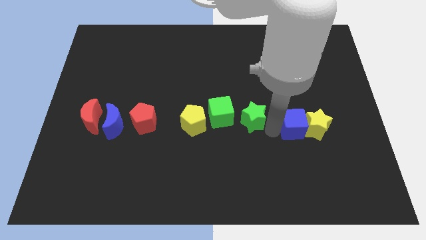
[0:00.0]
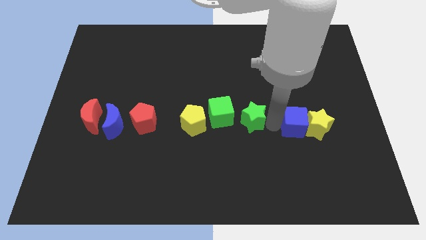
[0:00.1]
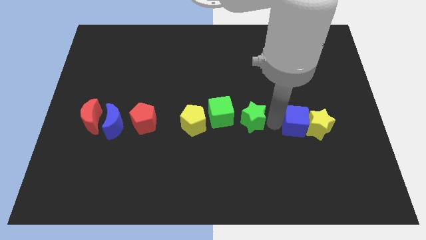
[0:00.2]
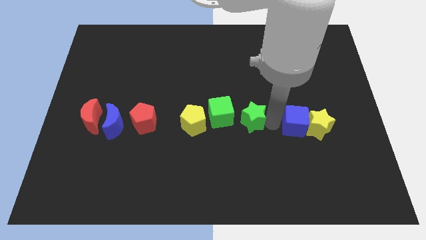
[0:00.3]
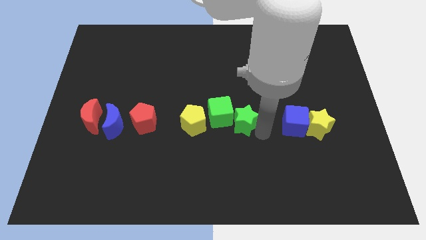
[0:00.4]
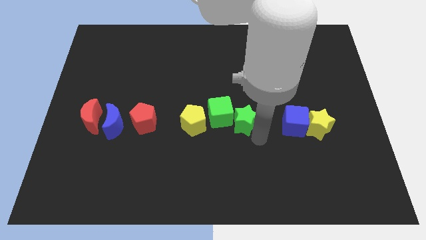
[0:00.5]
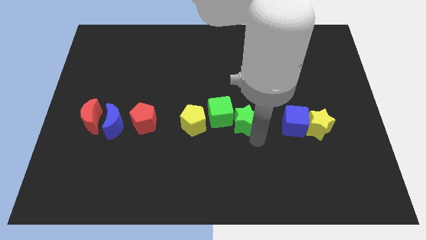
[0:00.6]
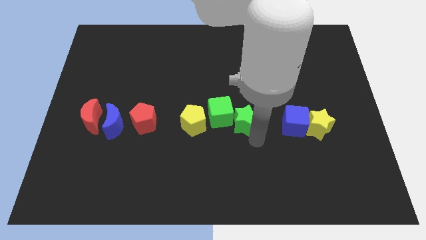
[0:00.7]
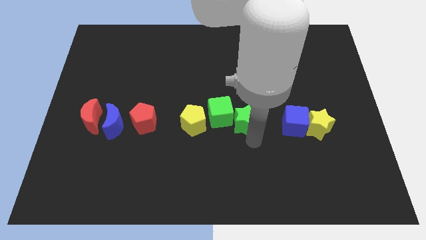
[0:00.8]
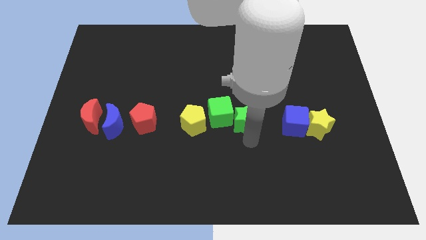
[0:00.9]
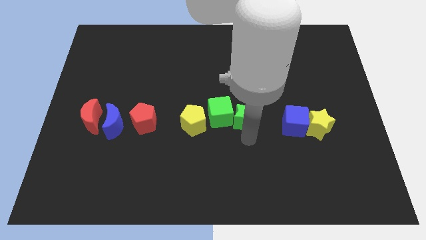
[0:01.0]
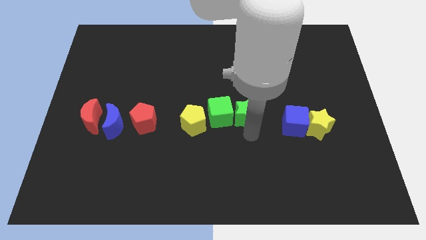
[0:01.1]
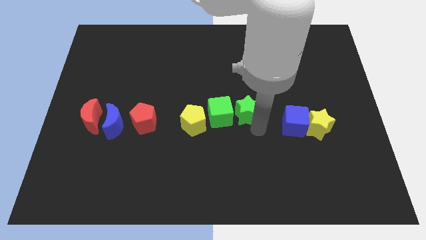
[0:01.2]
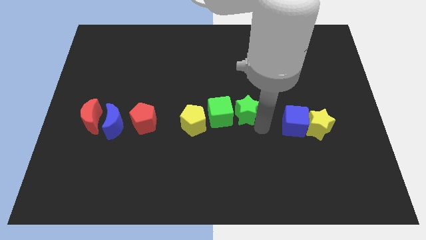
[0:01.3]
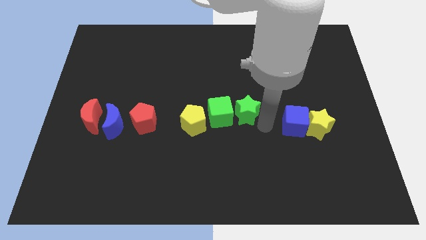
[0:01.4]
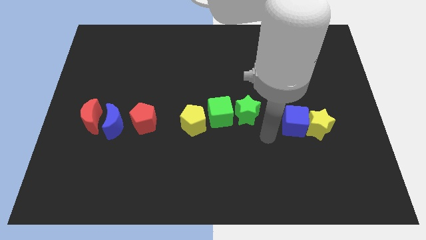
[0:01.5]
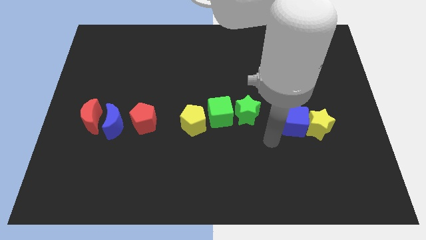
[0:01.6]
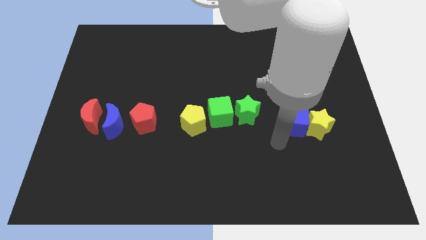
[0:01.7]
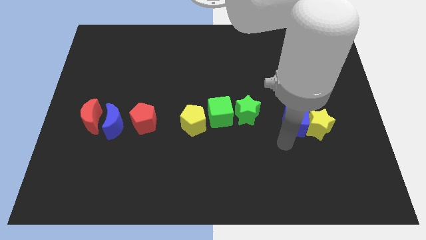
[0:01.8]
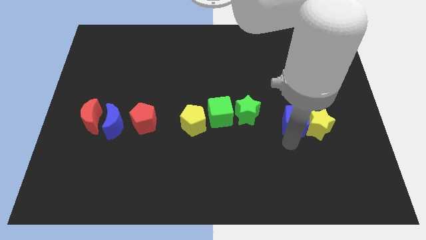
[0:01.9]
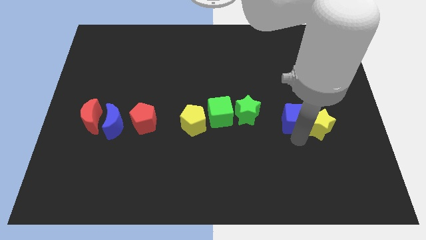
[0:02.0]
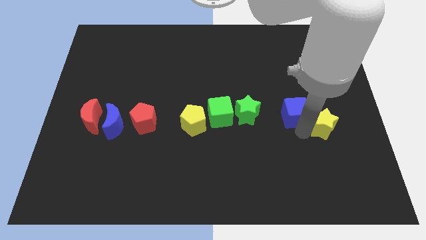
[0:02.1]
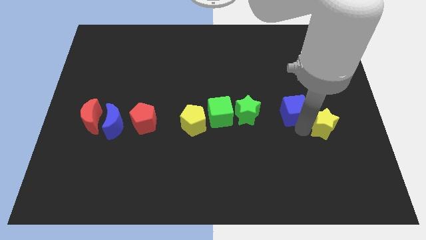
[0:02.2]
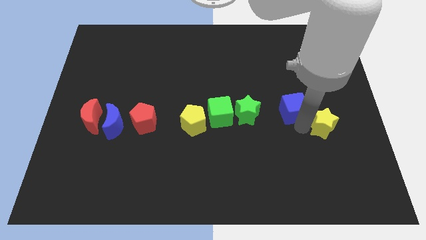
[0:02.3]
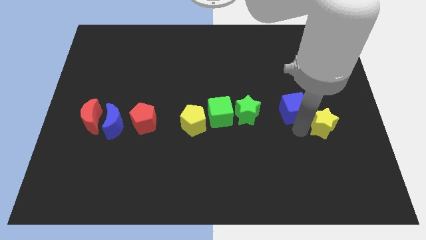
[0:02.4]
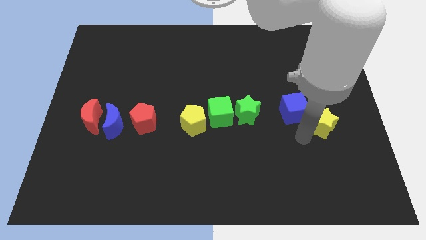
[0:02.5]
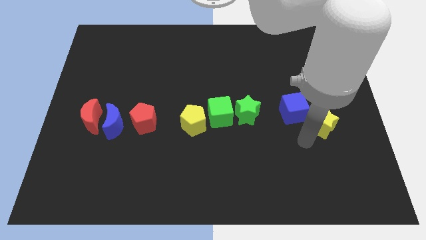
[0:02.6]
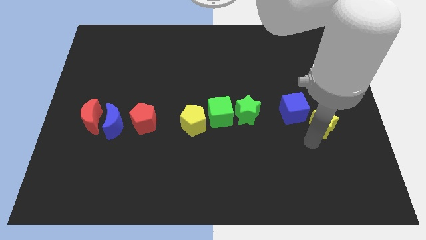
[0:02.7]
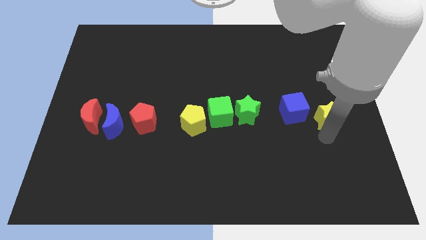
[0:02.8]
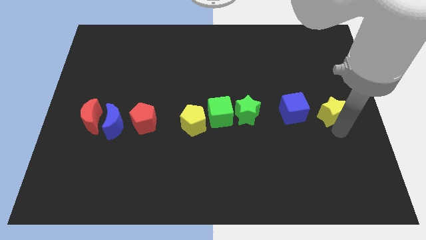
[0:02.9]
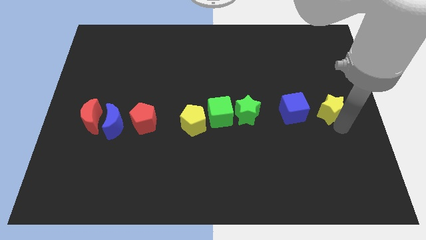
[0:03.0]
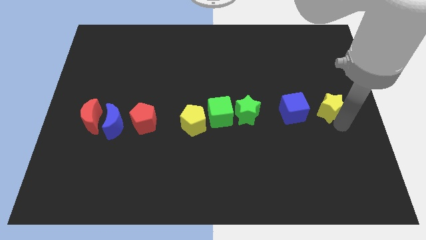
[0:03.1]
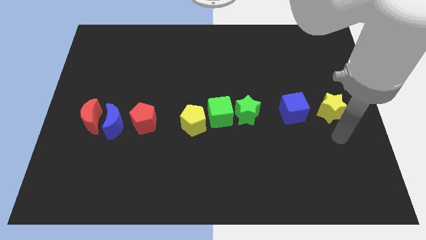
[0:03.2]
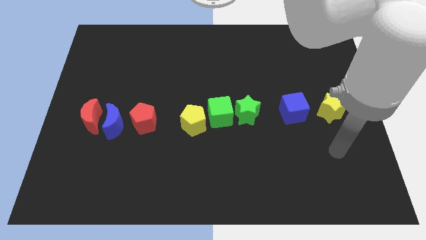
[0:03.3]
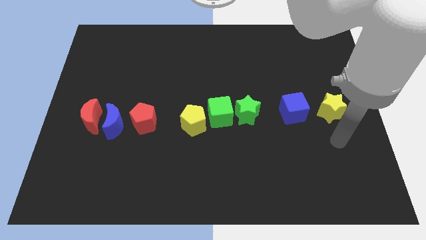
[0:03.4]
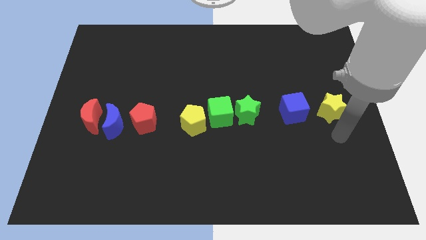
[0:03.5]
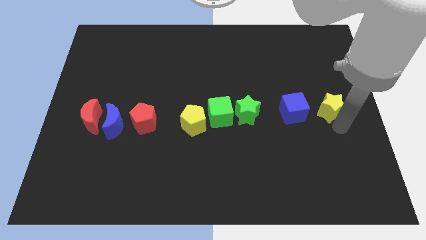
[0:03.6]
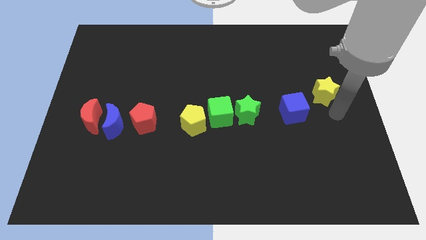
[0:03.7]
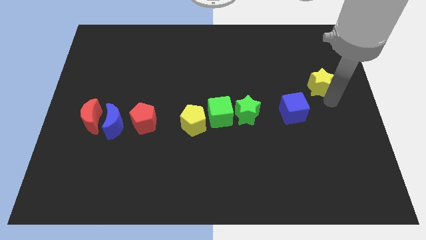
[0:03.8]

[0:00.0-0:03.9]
push the blue cube into the yellow star

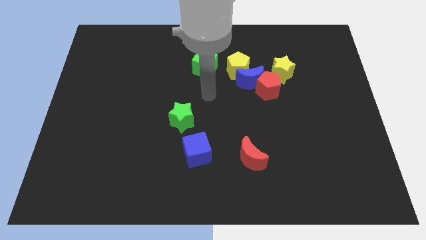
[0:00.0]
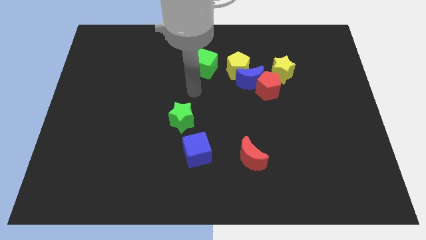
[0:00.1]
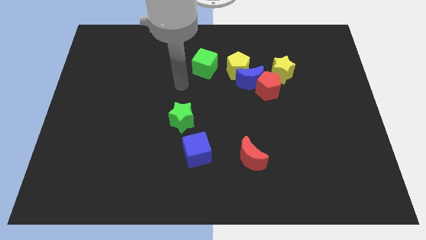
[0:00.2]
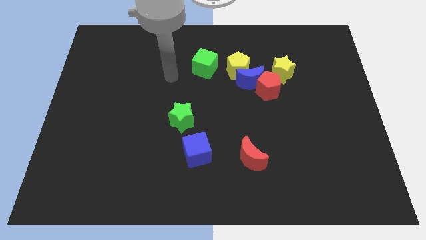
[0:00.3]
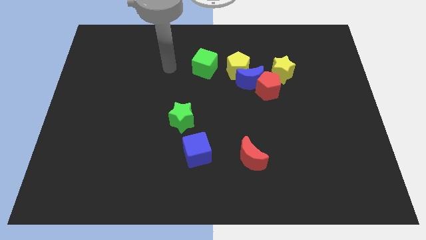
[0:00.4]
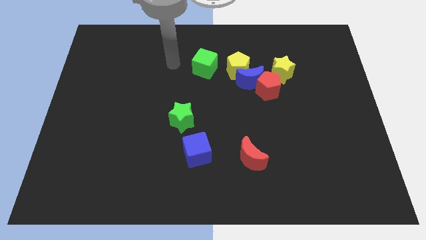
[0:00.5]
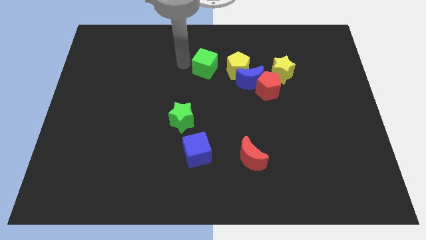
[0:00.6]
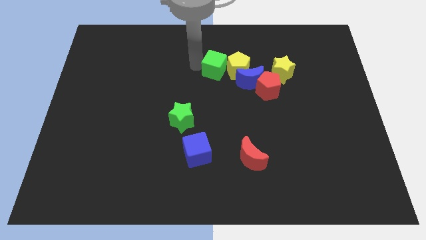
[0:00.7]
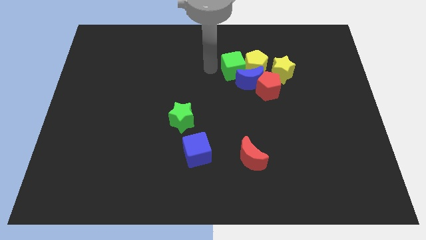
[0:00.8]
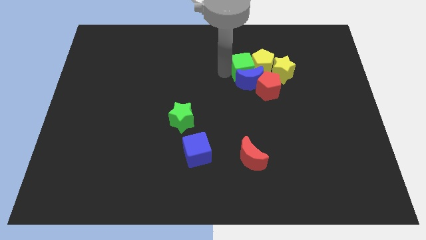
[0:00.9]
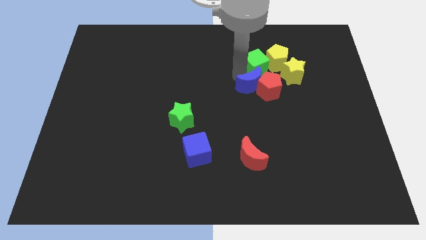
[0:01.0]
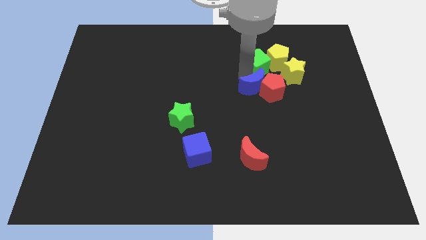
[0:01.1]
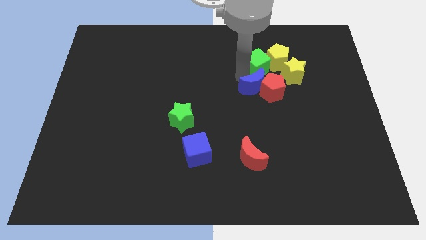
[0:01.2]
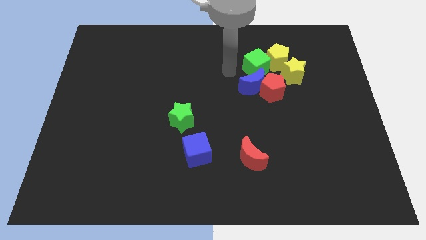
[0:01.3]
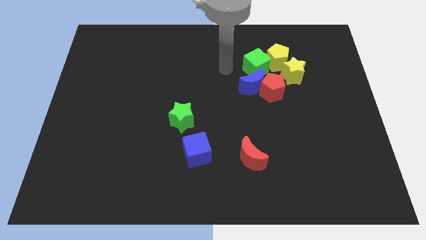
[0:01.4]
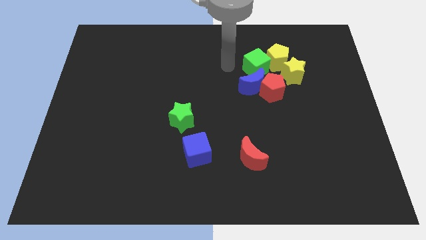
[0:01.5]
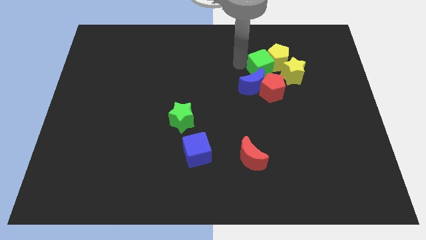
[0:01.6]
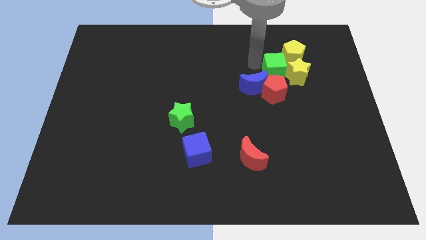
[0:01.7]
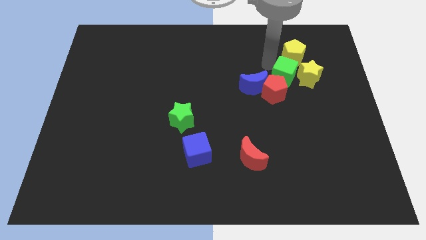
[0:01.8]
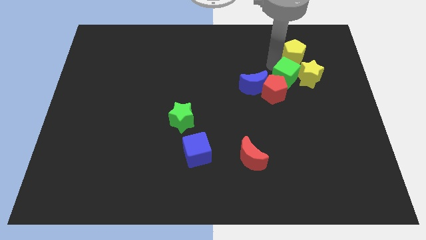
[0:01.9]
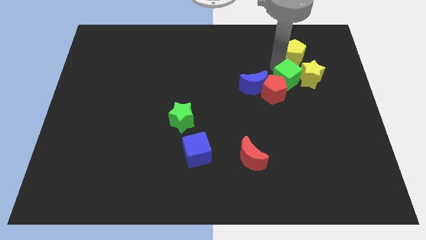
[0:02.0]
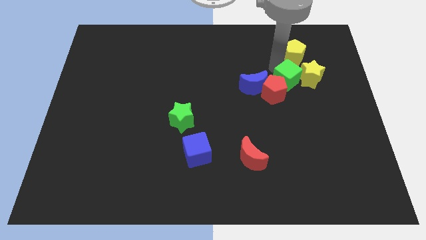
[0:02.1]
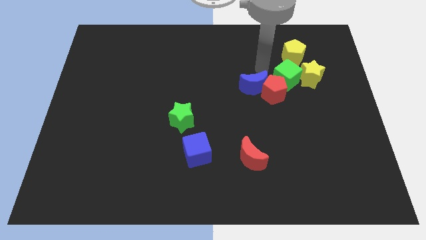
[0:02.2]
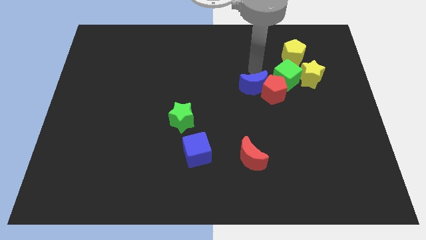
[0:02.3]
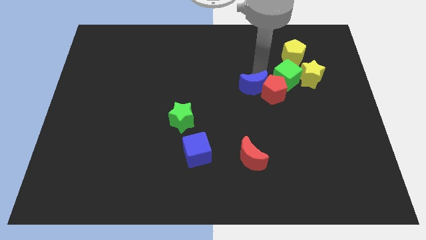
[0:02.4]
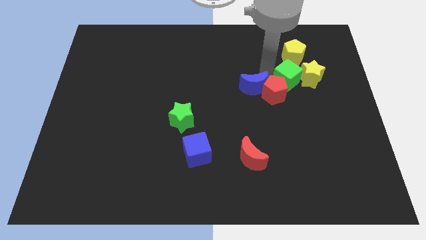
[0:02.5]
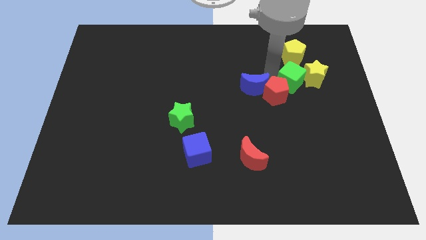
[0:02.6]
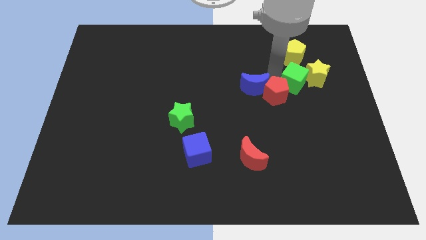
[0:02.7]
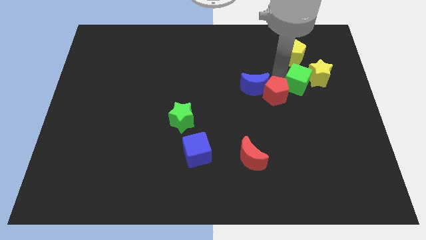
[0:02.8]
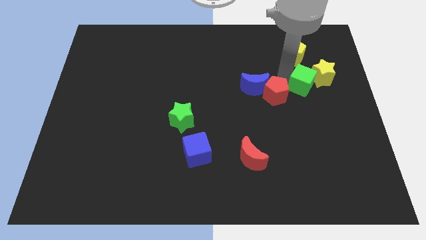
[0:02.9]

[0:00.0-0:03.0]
move green cube close to the yellow star and red pentagon

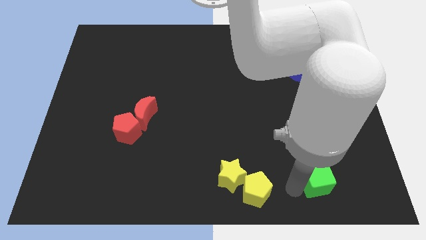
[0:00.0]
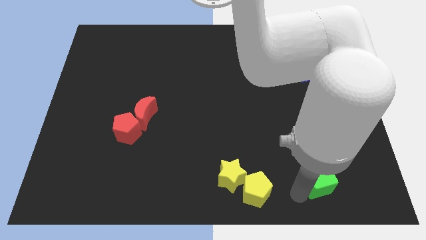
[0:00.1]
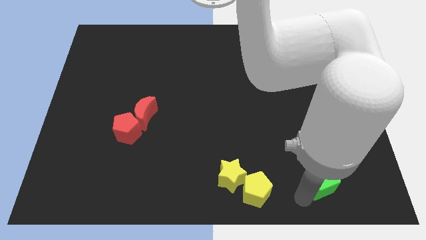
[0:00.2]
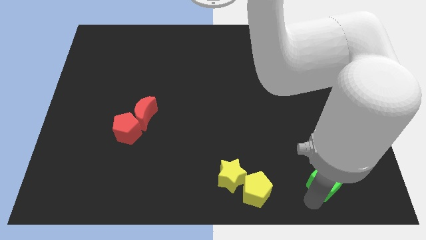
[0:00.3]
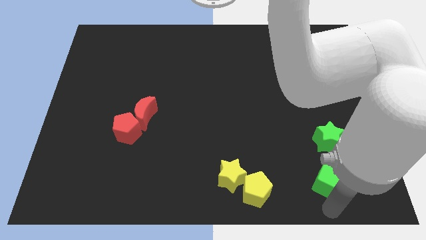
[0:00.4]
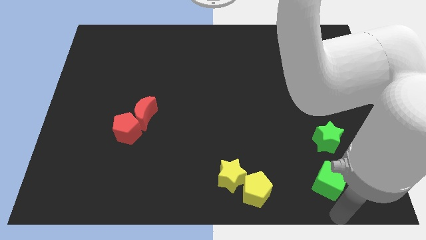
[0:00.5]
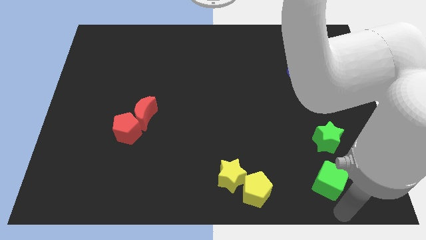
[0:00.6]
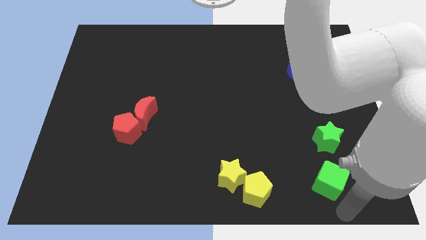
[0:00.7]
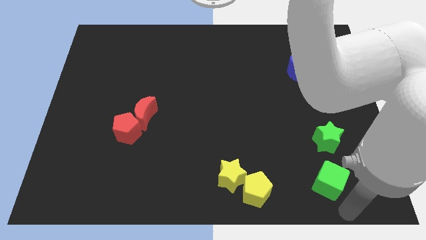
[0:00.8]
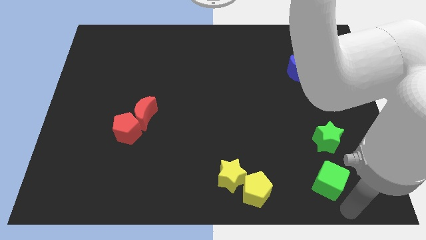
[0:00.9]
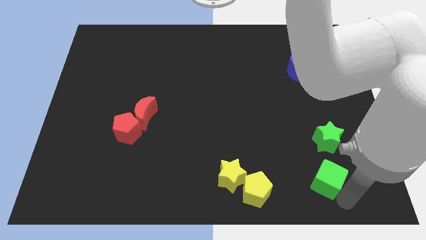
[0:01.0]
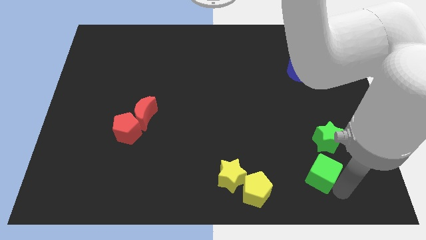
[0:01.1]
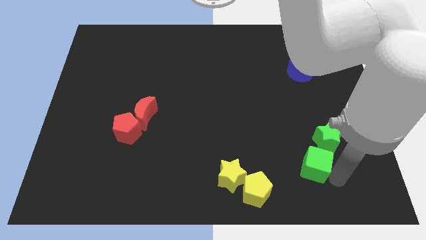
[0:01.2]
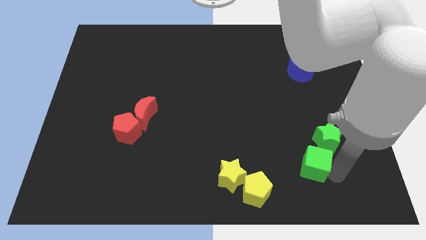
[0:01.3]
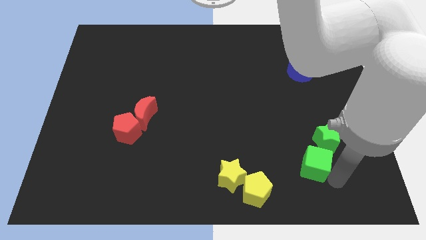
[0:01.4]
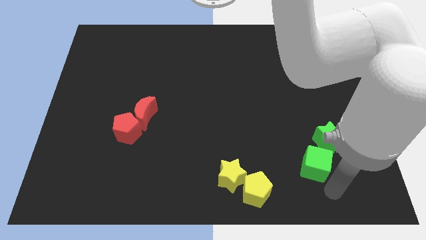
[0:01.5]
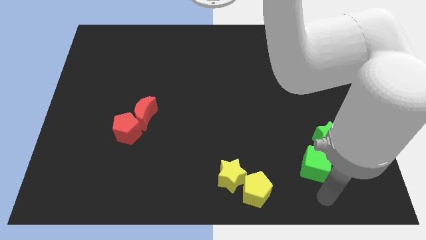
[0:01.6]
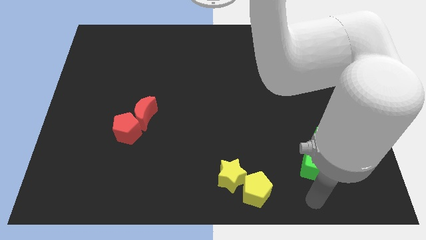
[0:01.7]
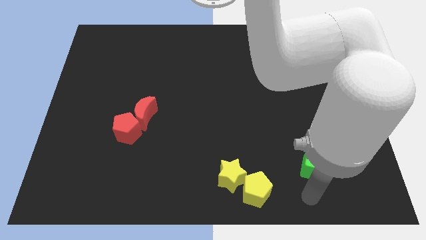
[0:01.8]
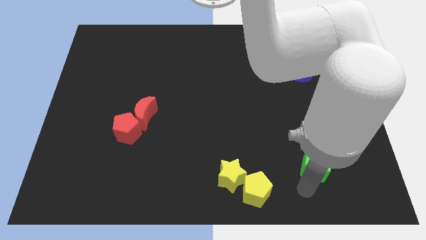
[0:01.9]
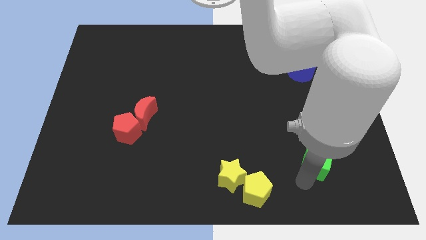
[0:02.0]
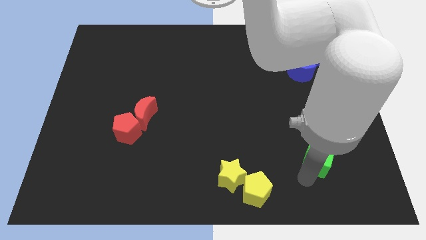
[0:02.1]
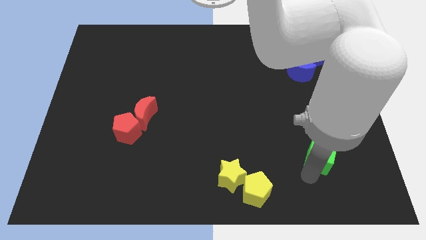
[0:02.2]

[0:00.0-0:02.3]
push the green cube into the green star
